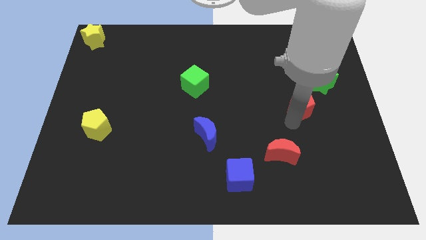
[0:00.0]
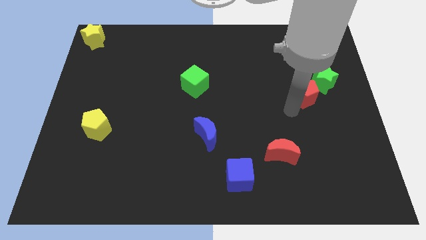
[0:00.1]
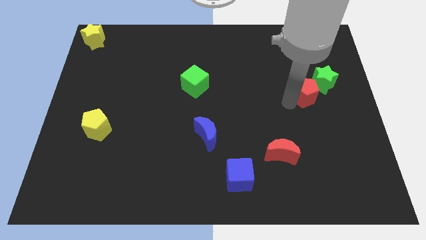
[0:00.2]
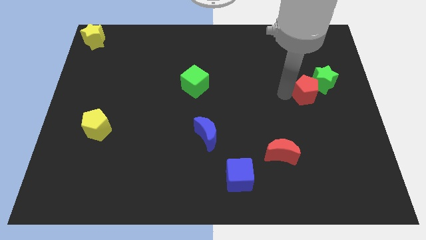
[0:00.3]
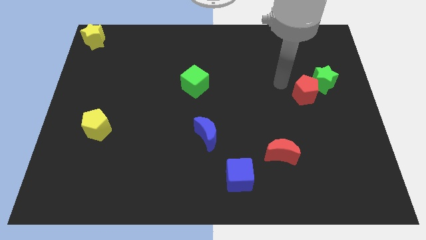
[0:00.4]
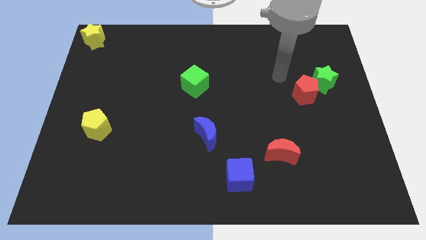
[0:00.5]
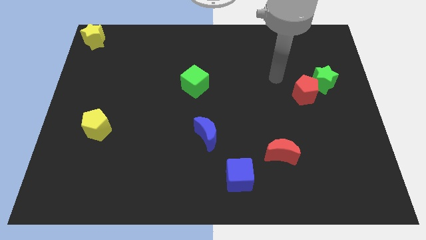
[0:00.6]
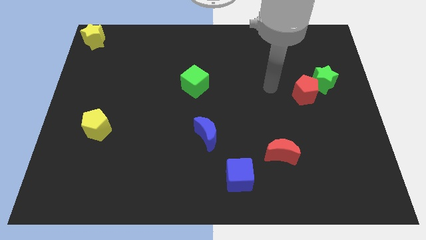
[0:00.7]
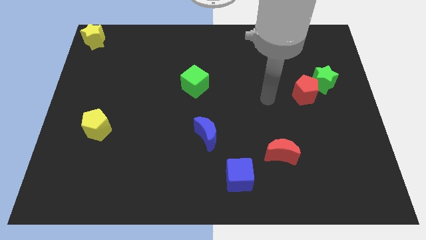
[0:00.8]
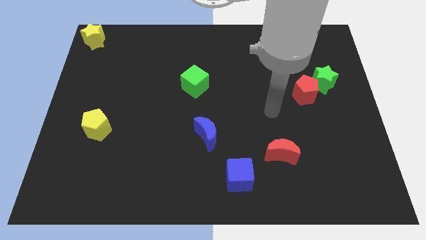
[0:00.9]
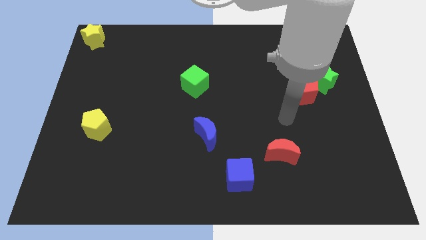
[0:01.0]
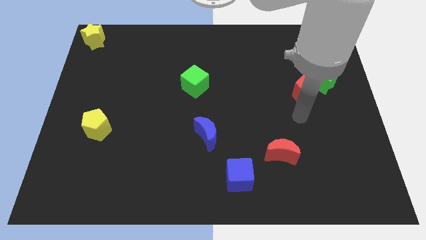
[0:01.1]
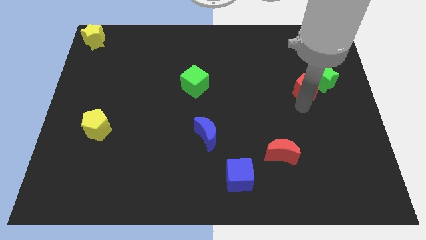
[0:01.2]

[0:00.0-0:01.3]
push the red pentagon into the green star

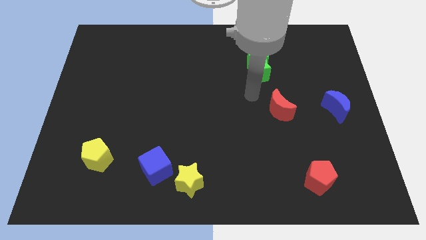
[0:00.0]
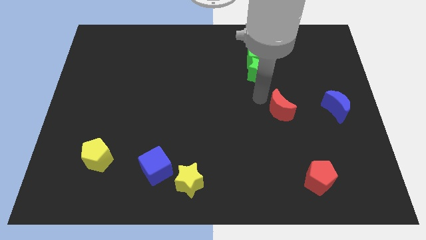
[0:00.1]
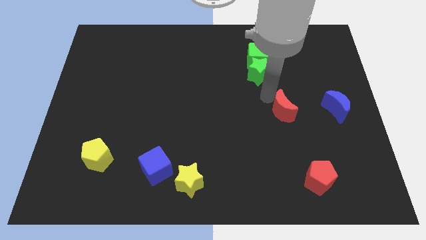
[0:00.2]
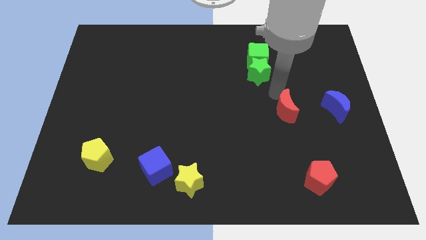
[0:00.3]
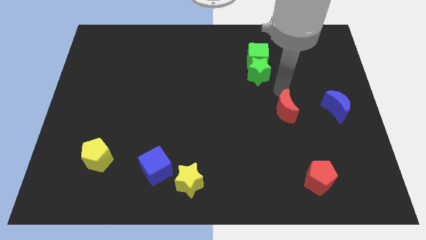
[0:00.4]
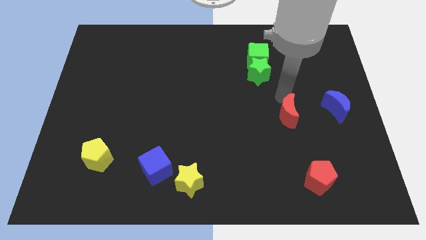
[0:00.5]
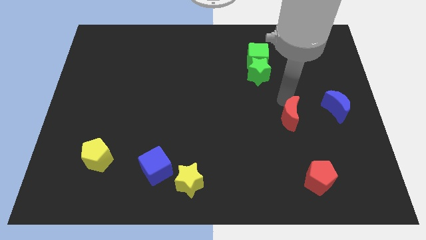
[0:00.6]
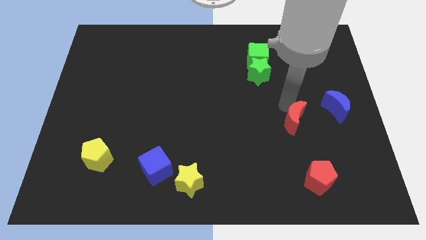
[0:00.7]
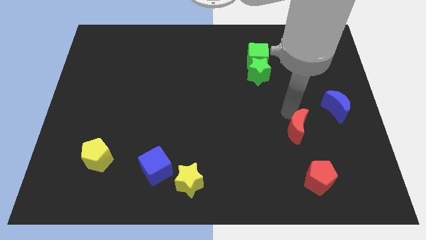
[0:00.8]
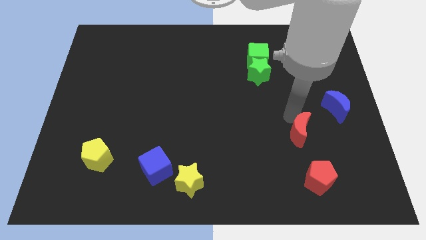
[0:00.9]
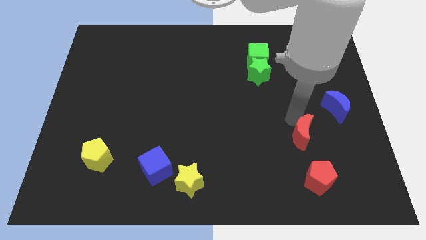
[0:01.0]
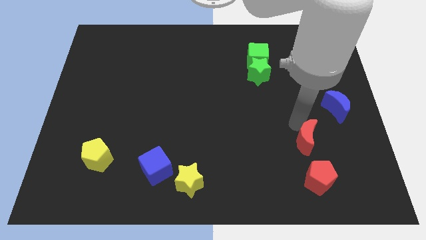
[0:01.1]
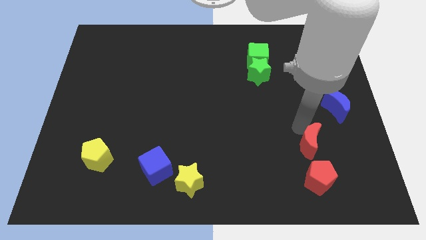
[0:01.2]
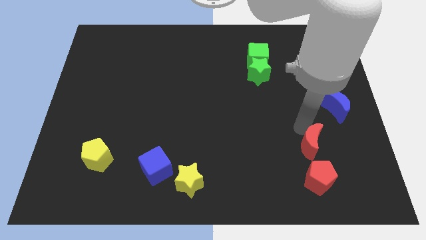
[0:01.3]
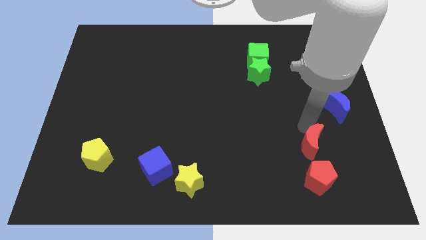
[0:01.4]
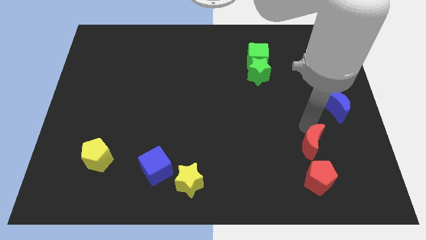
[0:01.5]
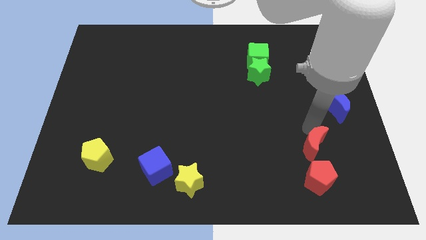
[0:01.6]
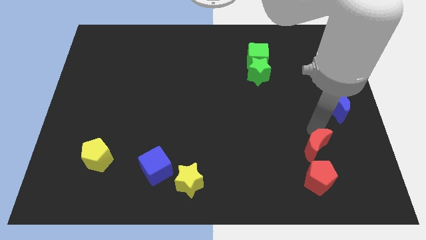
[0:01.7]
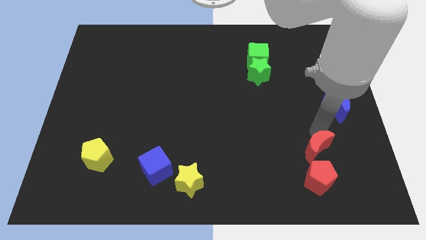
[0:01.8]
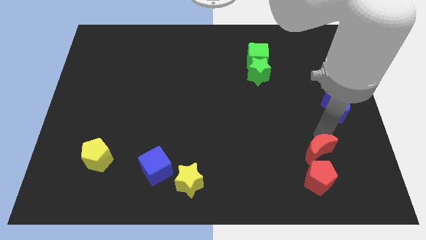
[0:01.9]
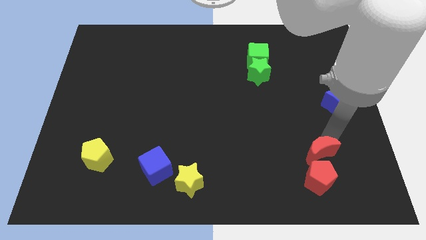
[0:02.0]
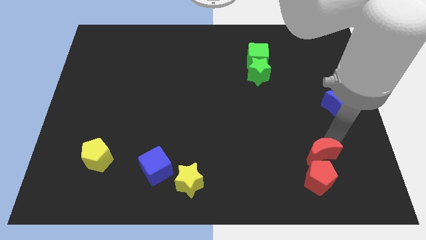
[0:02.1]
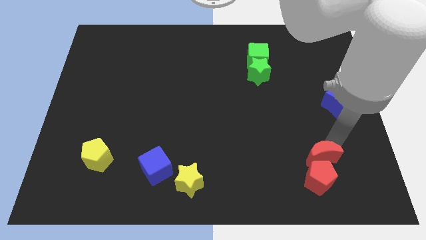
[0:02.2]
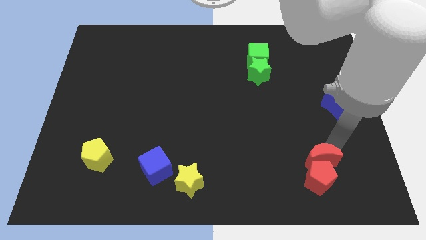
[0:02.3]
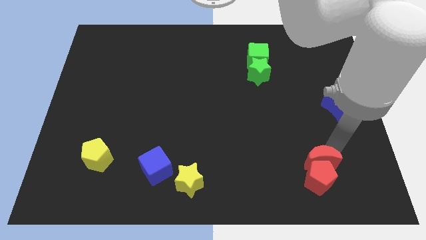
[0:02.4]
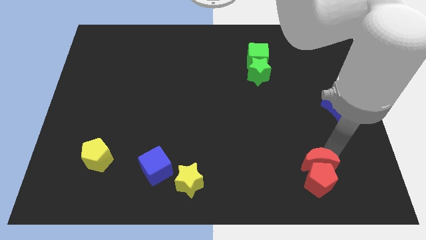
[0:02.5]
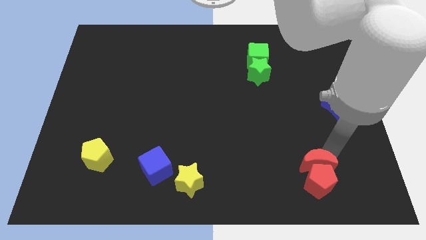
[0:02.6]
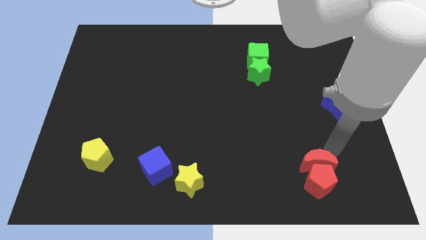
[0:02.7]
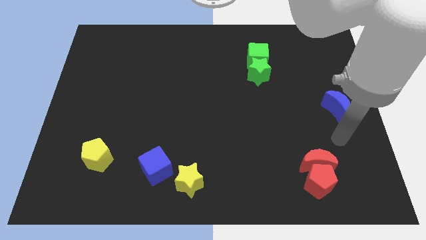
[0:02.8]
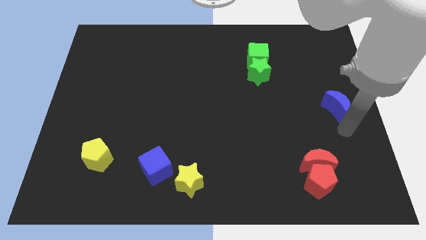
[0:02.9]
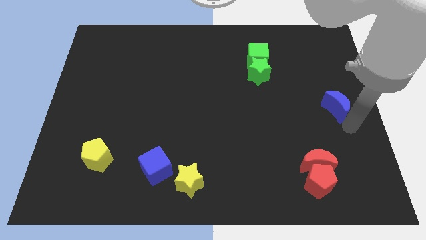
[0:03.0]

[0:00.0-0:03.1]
push your arm on the bottom edge of blue moon

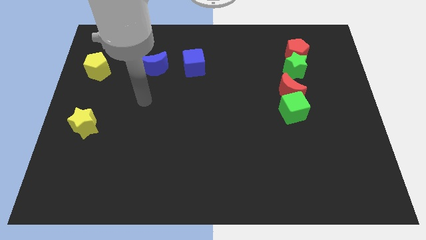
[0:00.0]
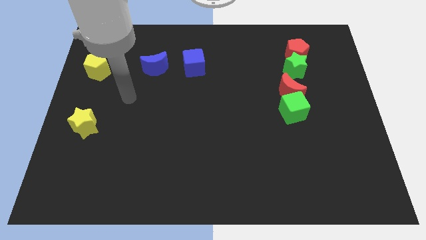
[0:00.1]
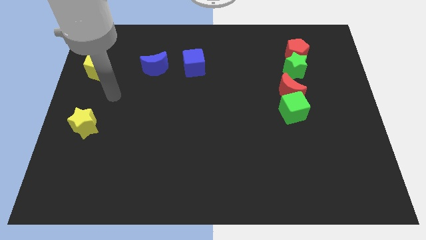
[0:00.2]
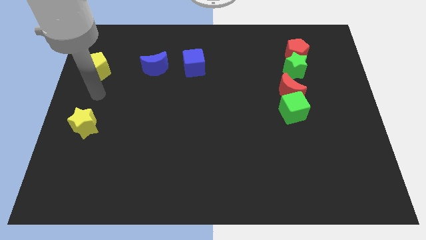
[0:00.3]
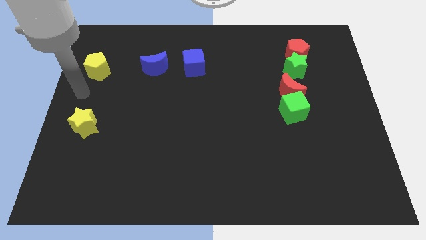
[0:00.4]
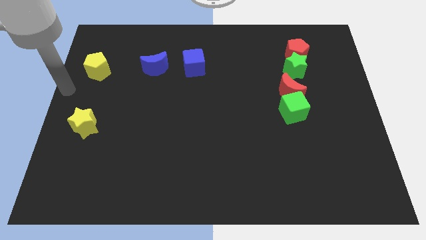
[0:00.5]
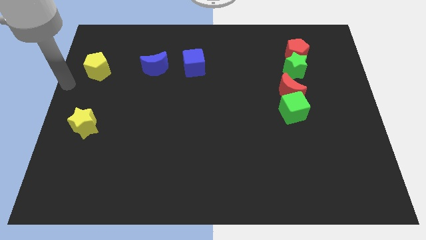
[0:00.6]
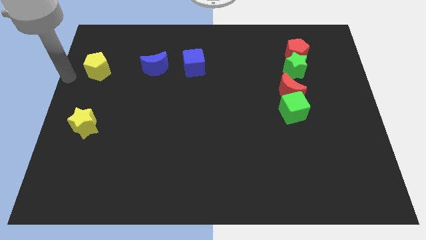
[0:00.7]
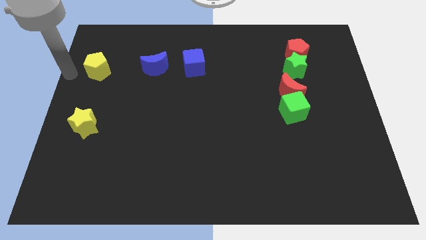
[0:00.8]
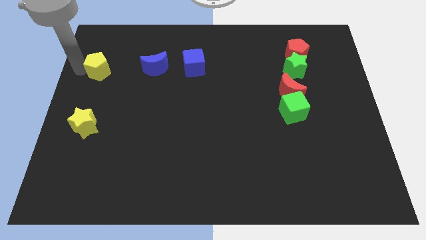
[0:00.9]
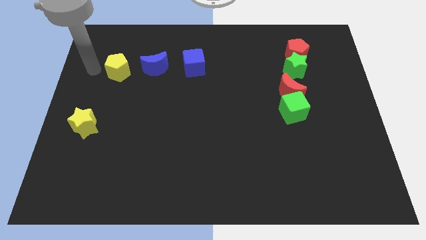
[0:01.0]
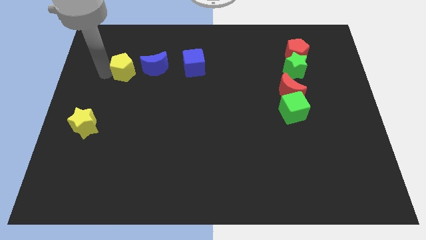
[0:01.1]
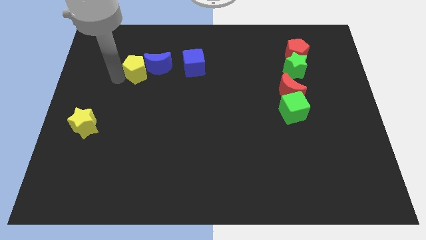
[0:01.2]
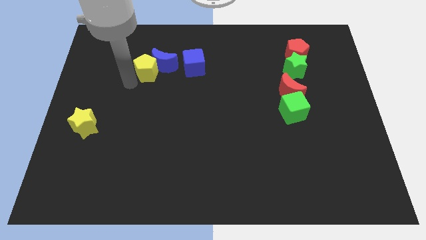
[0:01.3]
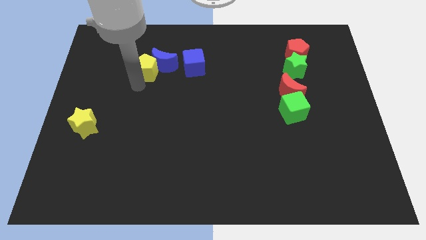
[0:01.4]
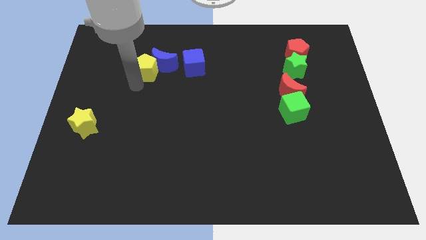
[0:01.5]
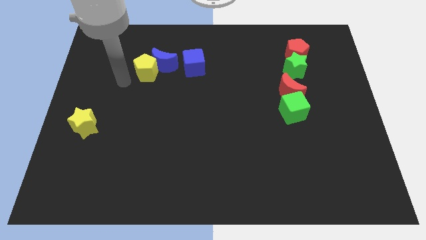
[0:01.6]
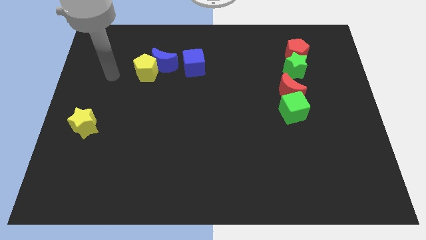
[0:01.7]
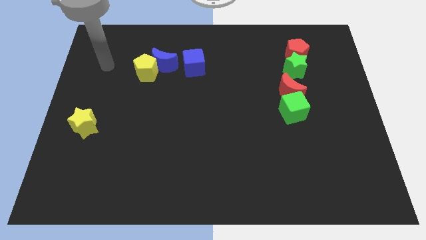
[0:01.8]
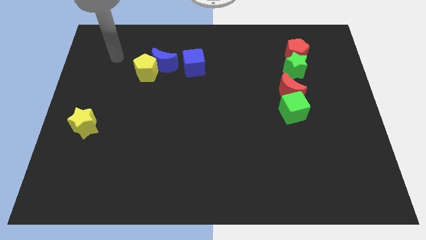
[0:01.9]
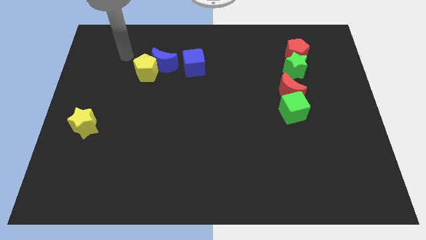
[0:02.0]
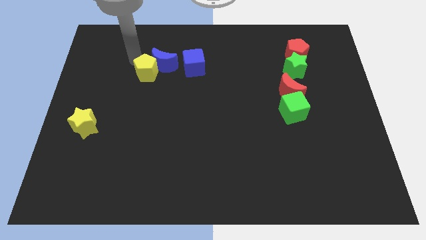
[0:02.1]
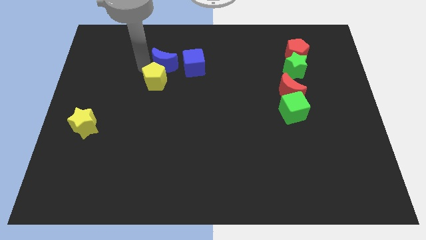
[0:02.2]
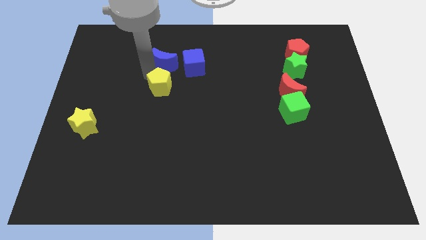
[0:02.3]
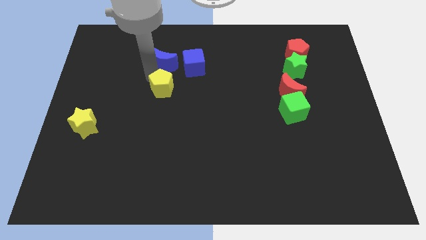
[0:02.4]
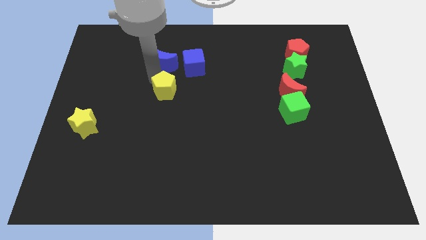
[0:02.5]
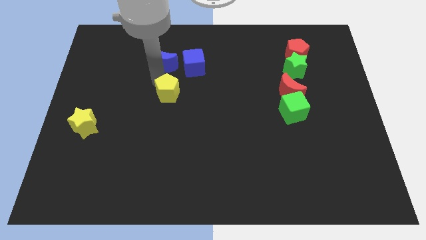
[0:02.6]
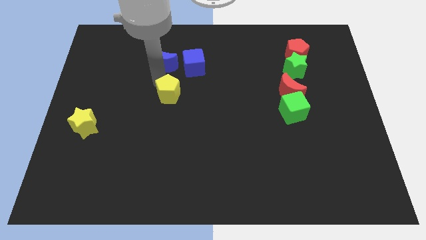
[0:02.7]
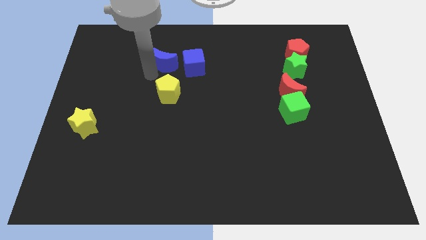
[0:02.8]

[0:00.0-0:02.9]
move the yellow pentagon to the center

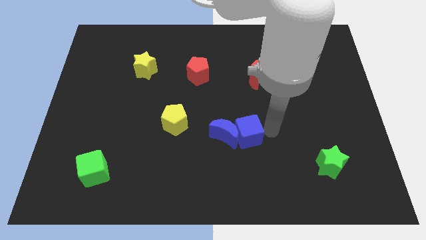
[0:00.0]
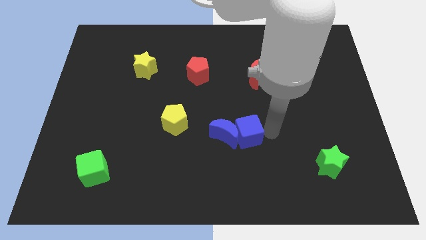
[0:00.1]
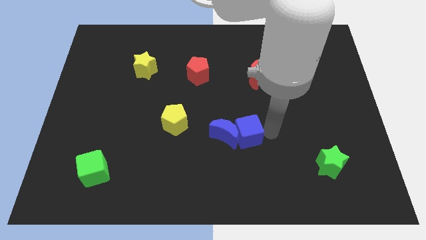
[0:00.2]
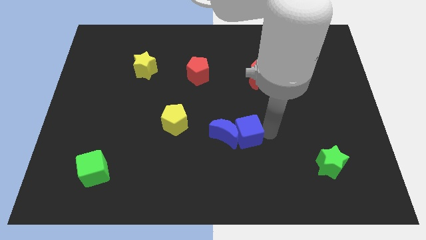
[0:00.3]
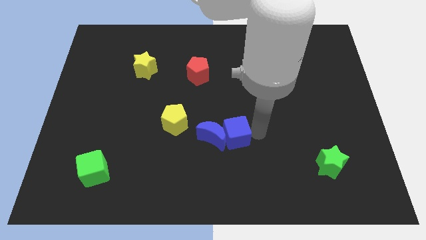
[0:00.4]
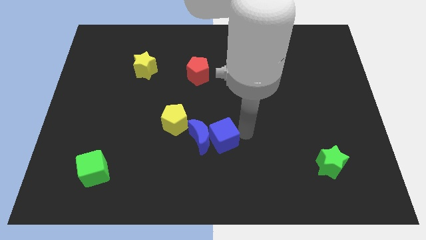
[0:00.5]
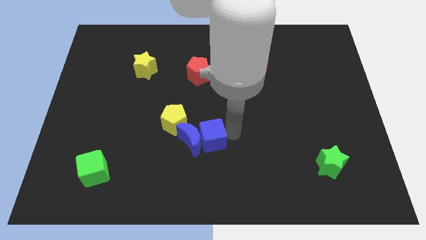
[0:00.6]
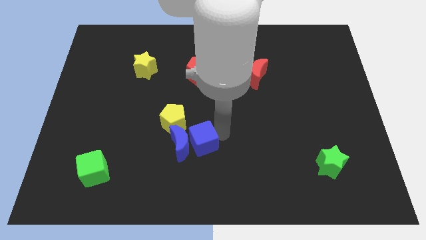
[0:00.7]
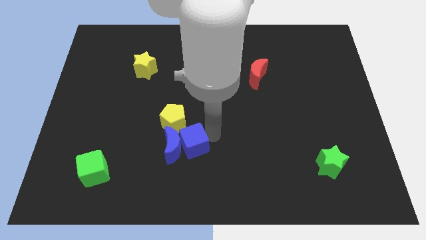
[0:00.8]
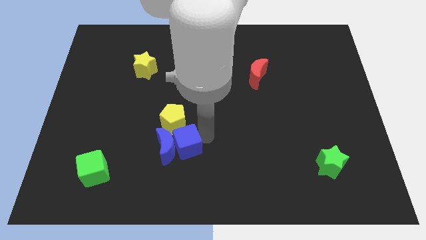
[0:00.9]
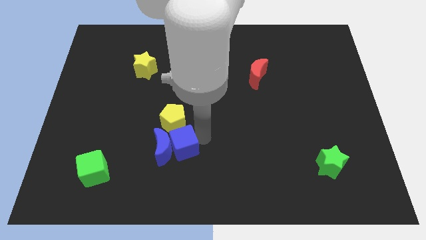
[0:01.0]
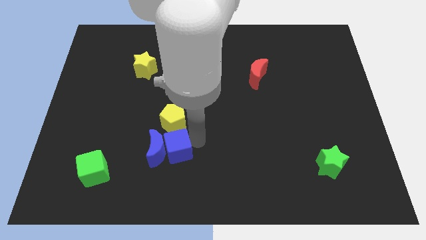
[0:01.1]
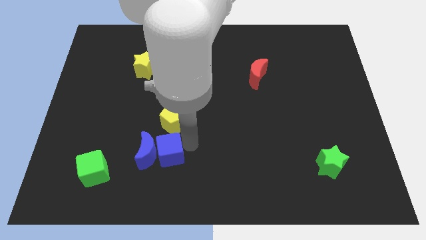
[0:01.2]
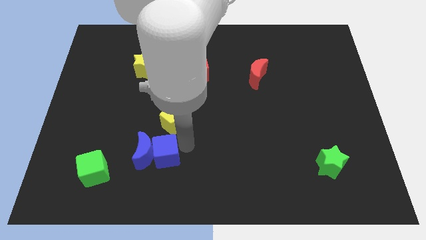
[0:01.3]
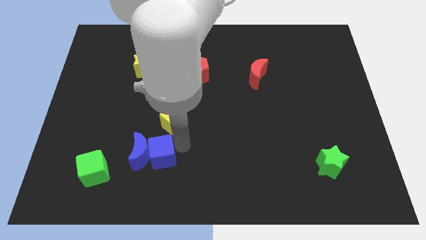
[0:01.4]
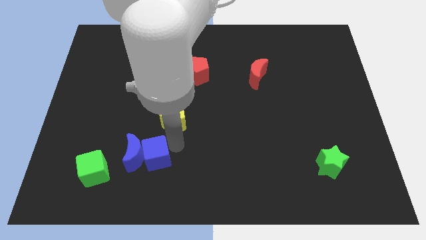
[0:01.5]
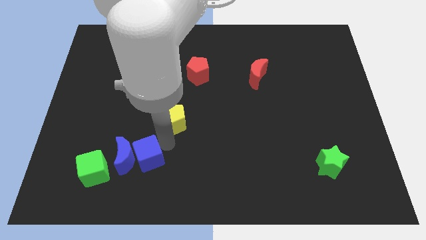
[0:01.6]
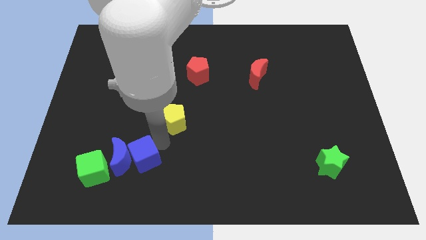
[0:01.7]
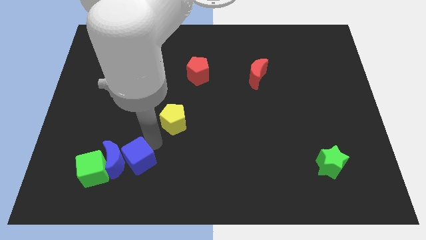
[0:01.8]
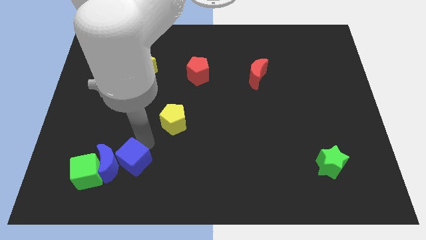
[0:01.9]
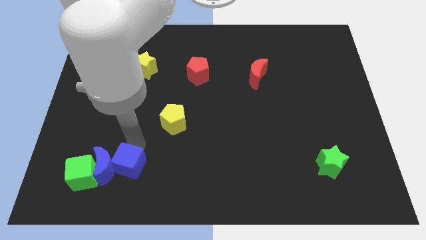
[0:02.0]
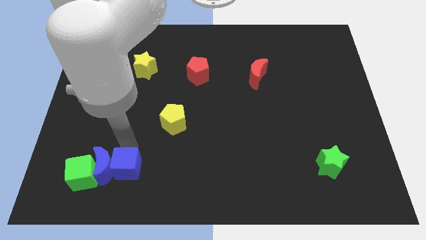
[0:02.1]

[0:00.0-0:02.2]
push the blue blocks into the green cube
